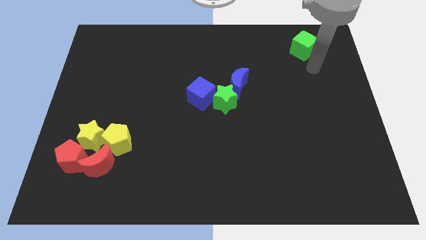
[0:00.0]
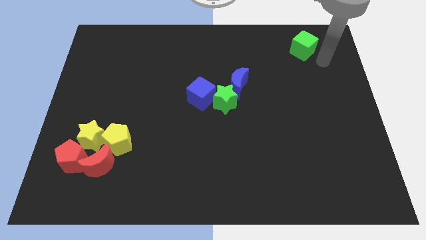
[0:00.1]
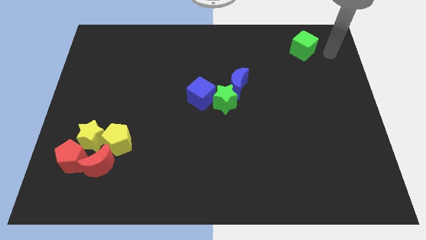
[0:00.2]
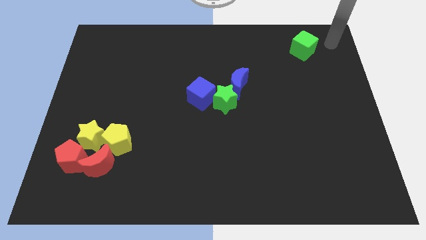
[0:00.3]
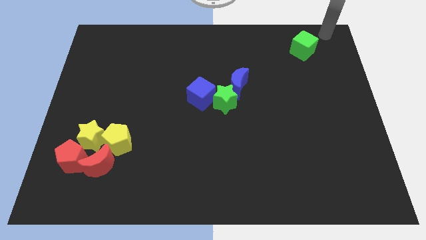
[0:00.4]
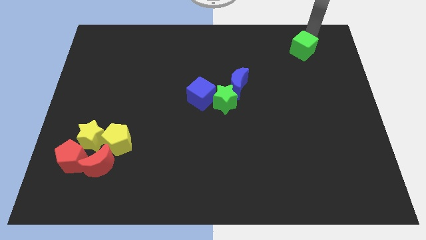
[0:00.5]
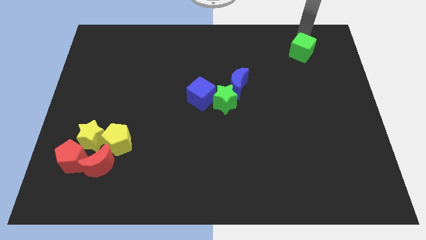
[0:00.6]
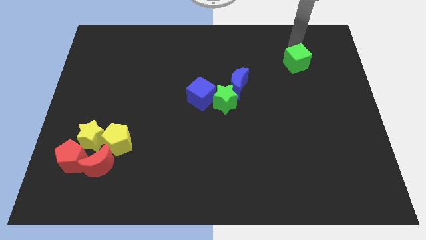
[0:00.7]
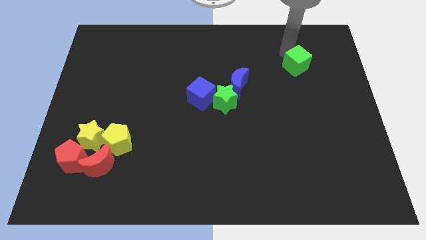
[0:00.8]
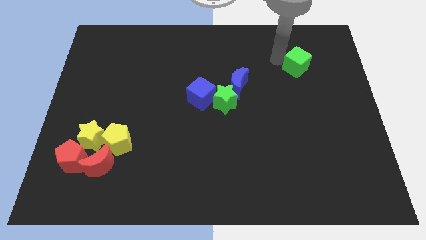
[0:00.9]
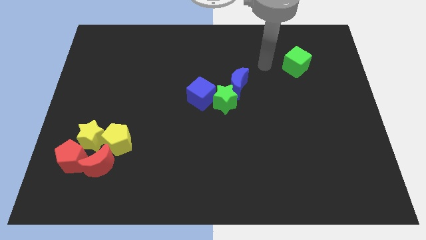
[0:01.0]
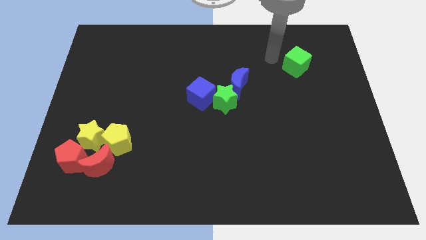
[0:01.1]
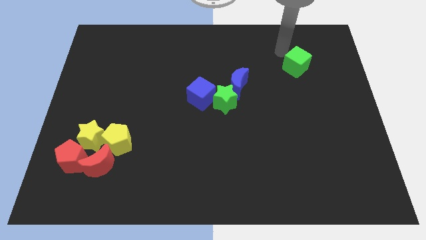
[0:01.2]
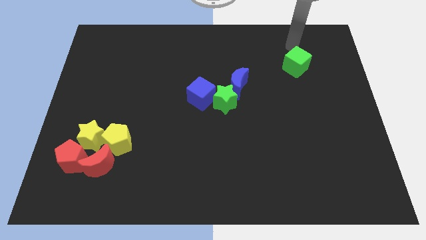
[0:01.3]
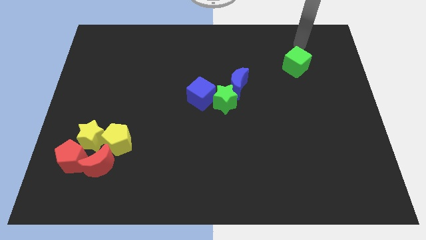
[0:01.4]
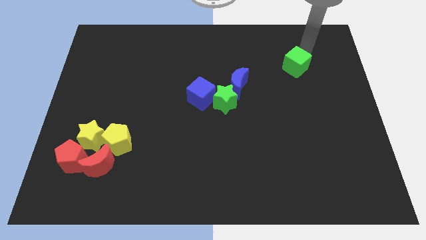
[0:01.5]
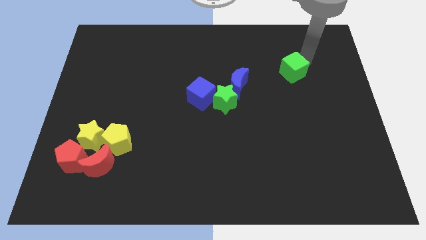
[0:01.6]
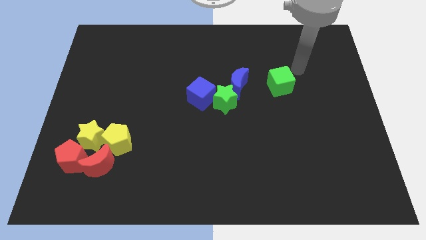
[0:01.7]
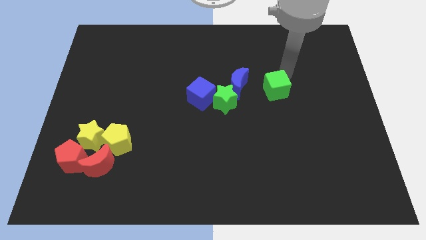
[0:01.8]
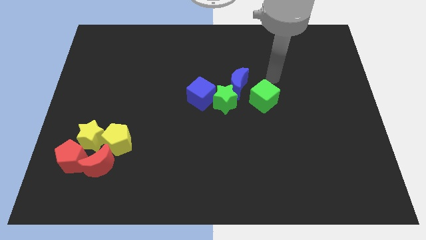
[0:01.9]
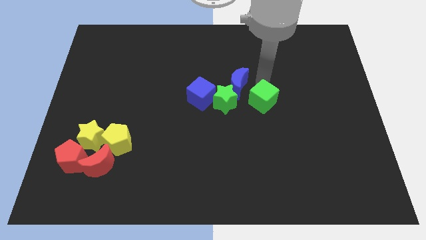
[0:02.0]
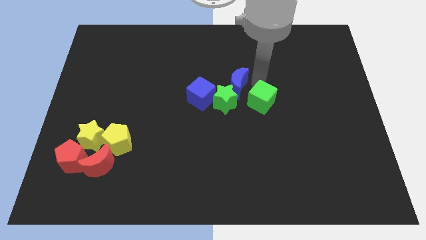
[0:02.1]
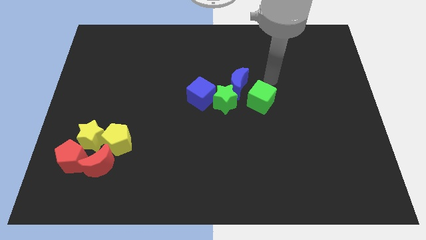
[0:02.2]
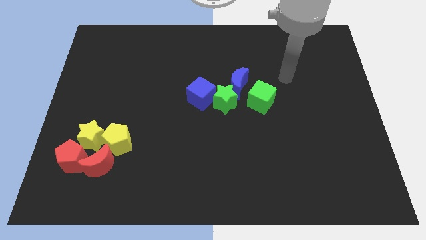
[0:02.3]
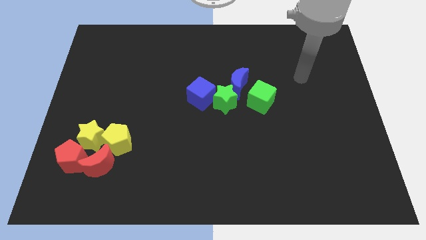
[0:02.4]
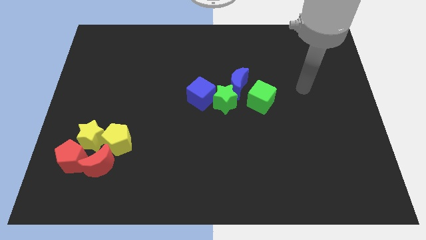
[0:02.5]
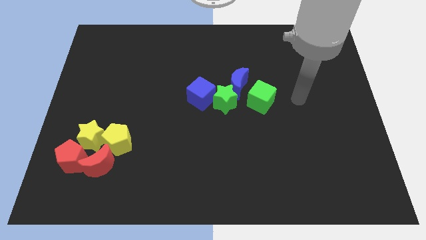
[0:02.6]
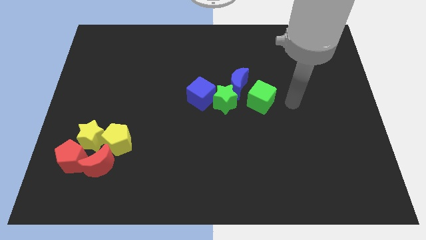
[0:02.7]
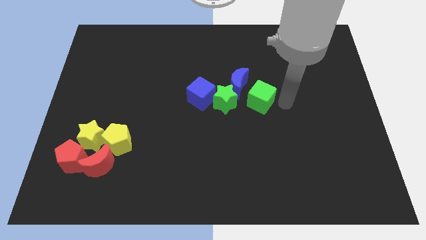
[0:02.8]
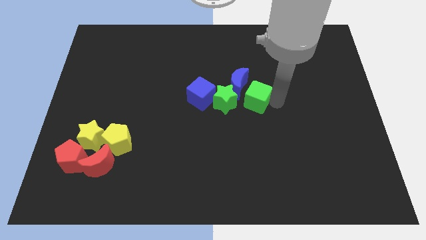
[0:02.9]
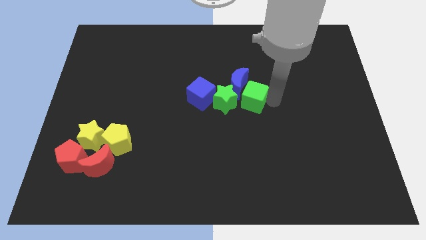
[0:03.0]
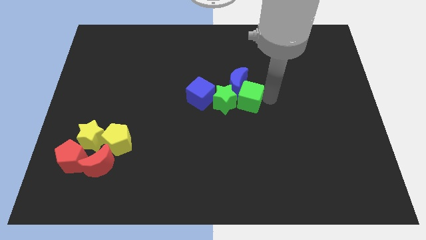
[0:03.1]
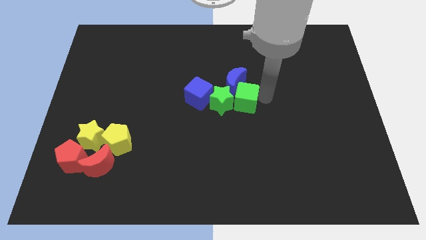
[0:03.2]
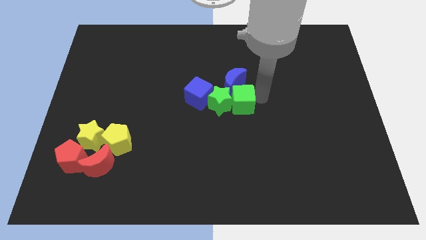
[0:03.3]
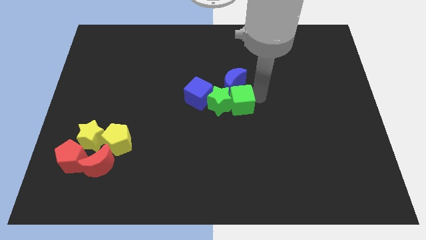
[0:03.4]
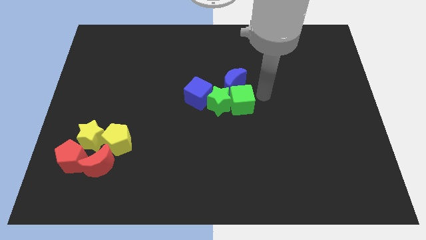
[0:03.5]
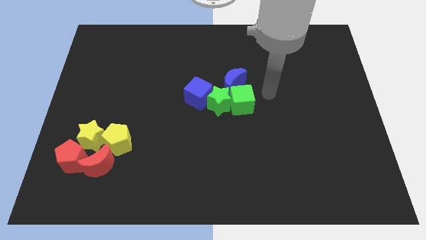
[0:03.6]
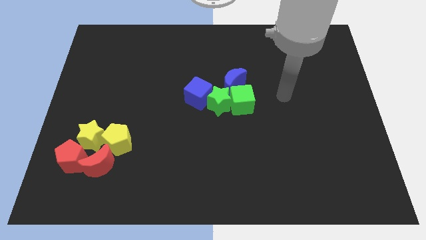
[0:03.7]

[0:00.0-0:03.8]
push the green cube into the right side of the green star

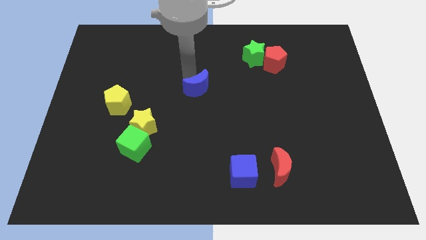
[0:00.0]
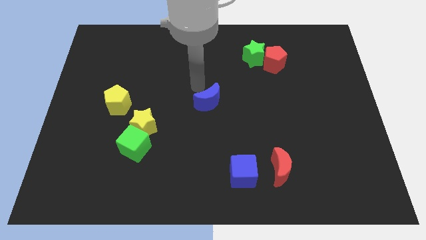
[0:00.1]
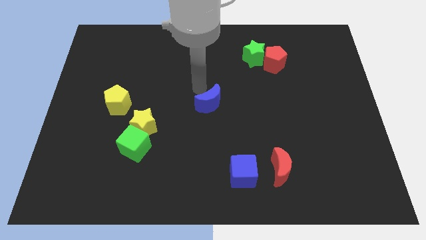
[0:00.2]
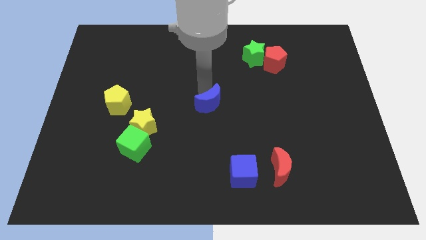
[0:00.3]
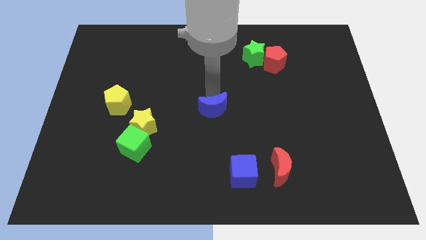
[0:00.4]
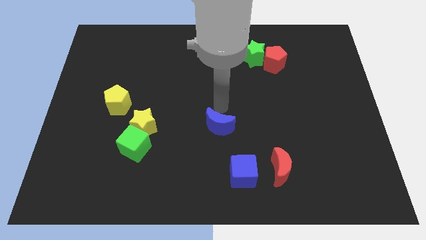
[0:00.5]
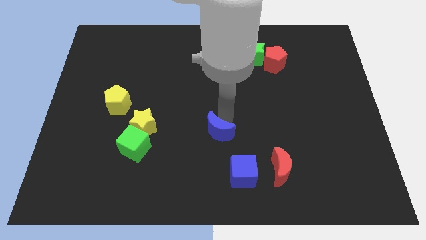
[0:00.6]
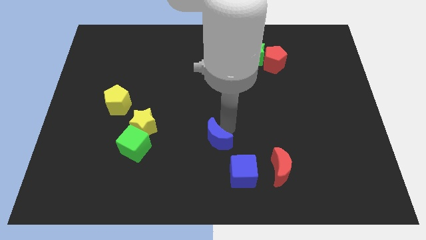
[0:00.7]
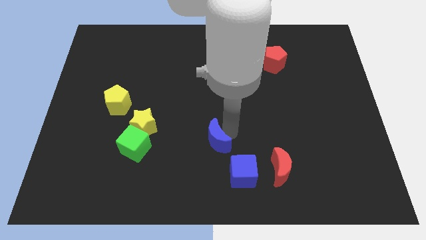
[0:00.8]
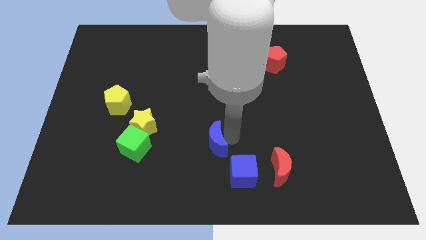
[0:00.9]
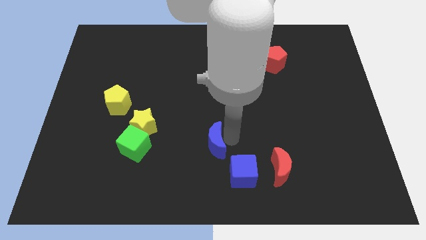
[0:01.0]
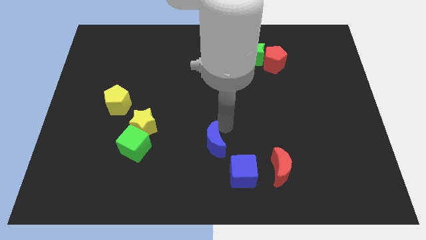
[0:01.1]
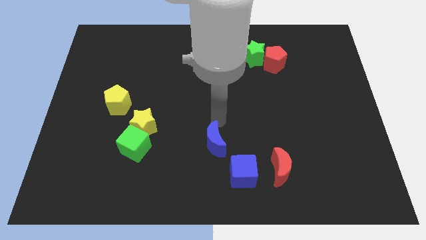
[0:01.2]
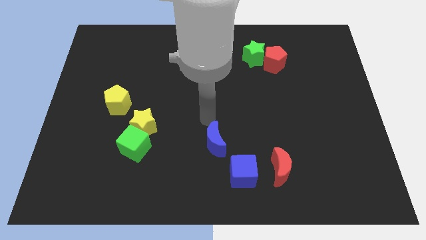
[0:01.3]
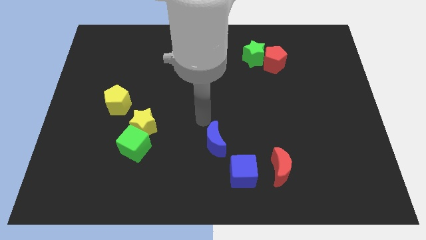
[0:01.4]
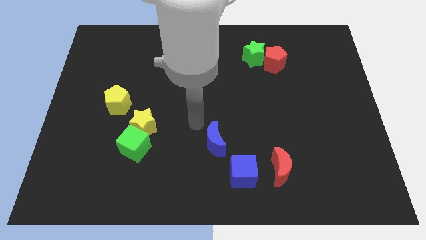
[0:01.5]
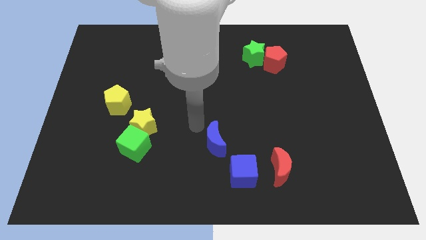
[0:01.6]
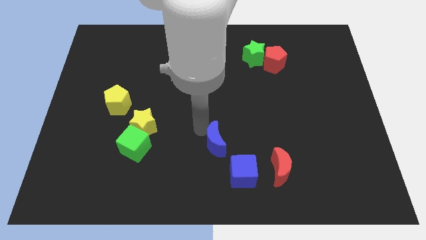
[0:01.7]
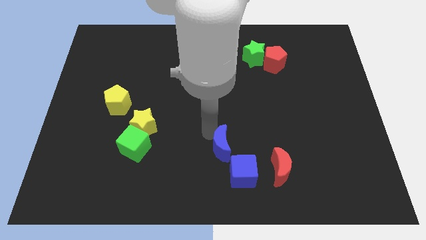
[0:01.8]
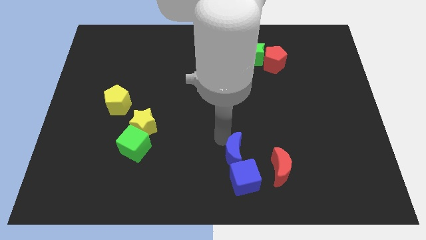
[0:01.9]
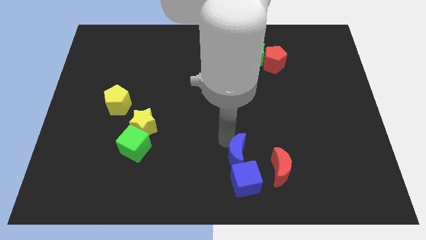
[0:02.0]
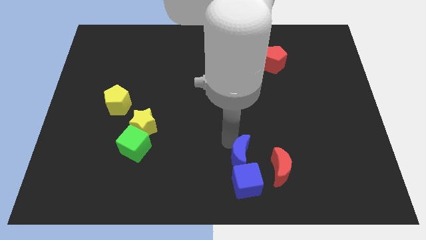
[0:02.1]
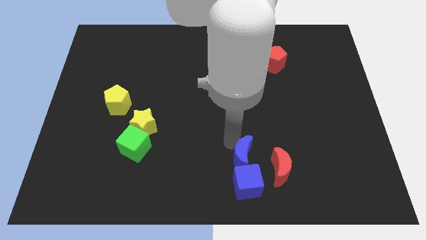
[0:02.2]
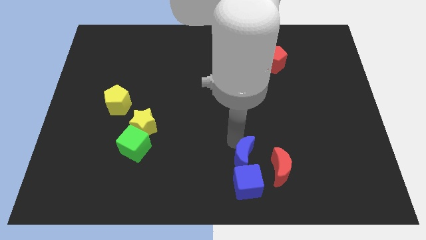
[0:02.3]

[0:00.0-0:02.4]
push the blue moon into the blue cube

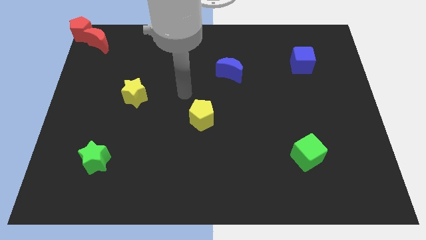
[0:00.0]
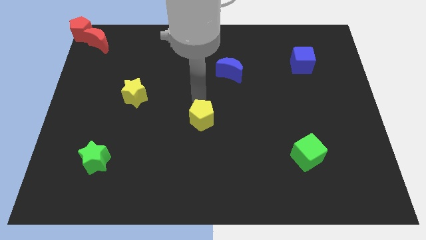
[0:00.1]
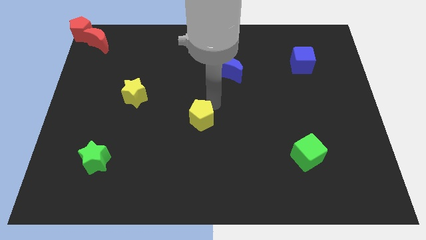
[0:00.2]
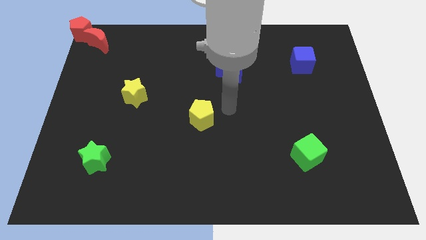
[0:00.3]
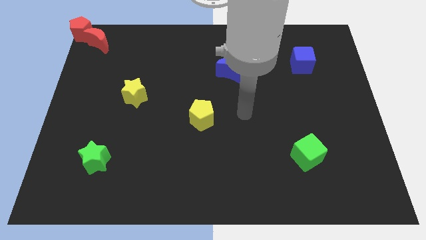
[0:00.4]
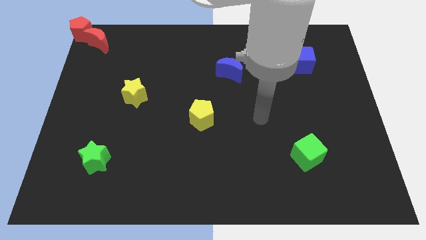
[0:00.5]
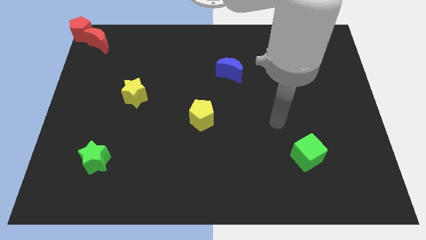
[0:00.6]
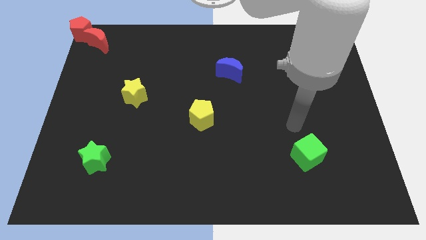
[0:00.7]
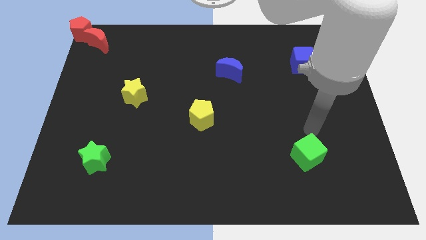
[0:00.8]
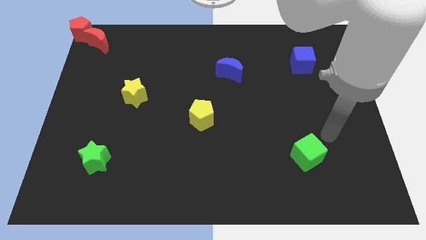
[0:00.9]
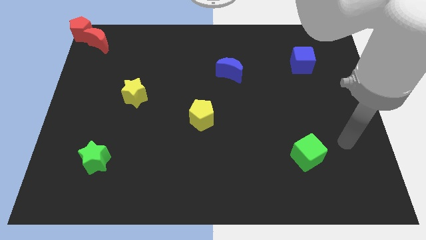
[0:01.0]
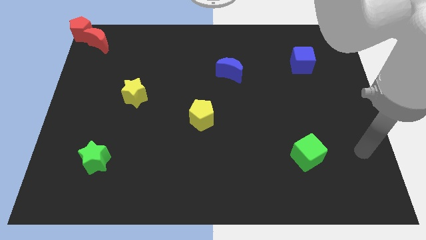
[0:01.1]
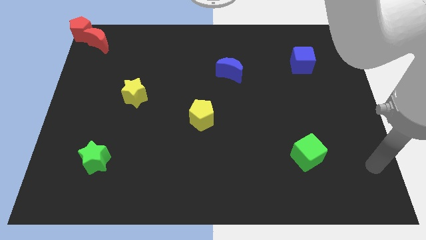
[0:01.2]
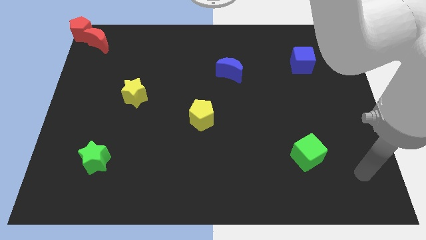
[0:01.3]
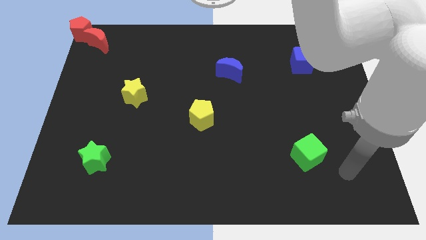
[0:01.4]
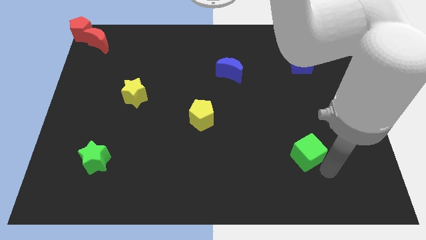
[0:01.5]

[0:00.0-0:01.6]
place the arm diagonally to the green cube

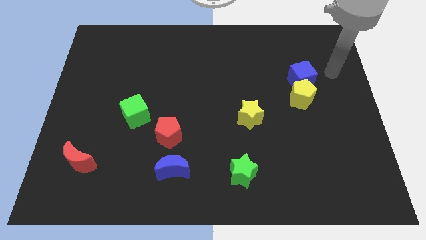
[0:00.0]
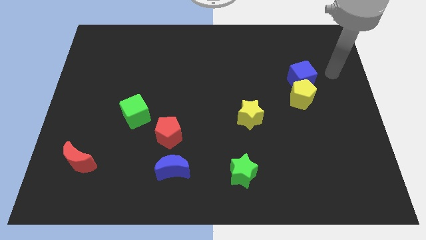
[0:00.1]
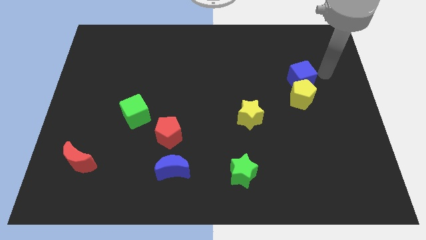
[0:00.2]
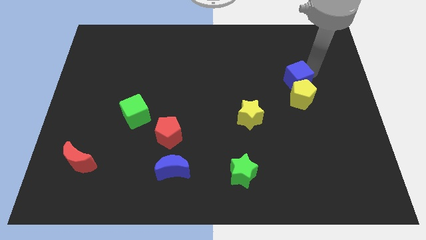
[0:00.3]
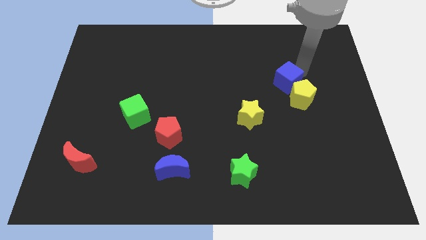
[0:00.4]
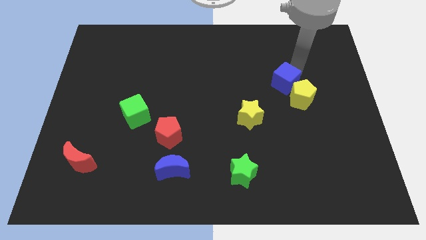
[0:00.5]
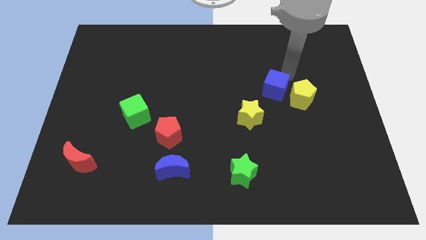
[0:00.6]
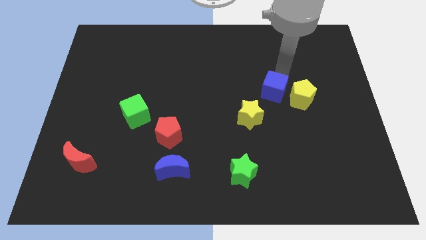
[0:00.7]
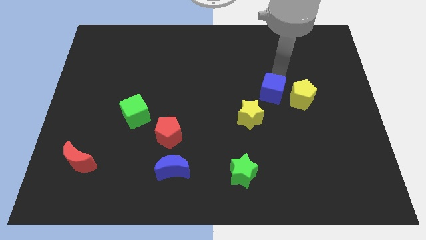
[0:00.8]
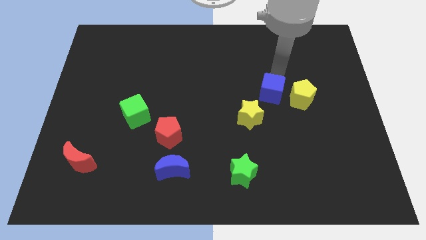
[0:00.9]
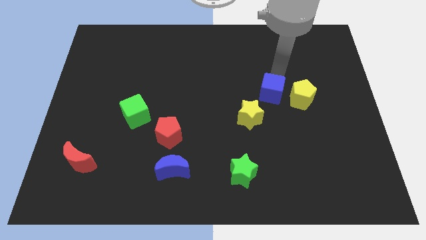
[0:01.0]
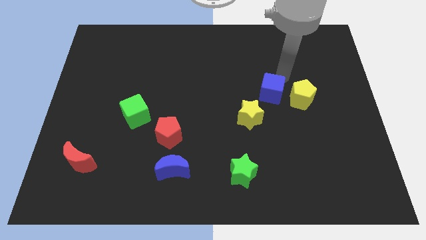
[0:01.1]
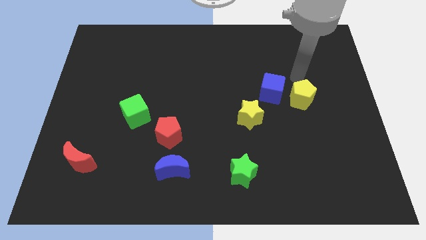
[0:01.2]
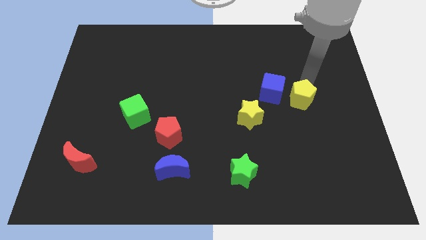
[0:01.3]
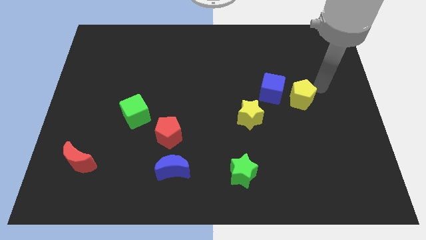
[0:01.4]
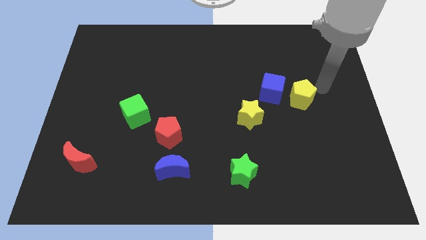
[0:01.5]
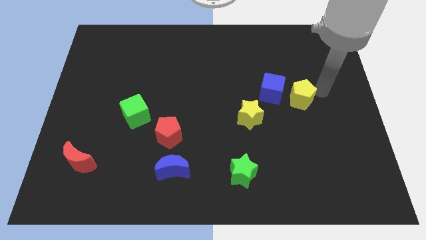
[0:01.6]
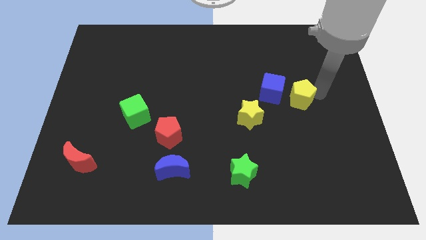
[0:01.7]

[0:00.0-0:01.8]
move the blue cube at the left of the yellow pentagon
